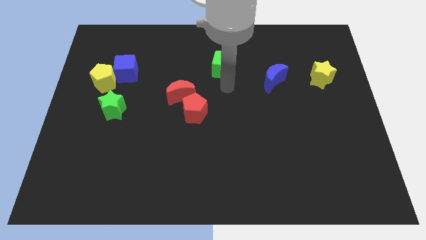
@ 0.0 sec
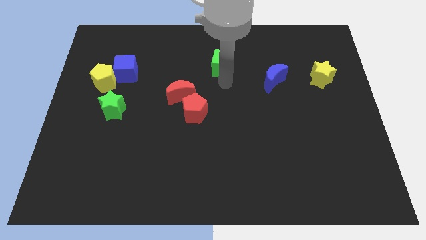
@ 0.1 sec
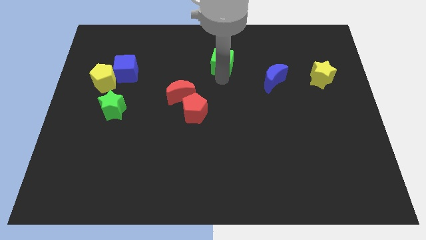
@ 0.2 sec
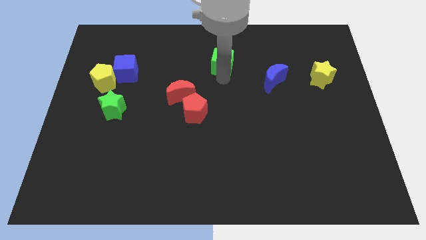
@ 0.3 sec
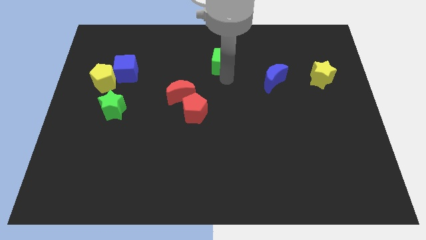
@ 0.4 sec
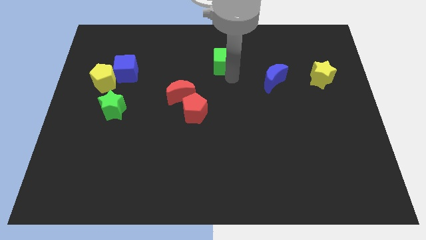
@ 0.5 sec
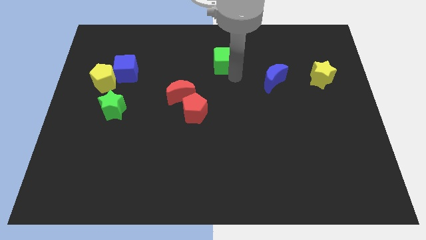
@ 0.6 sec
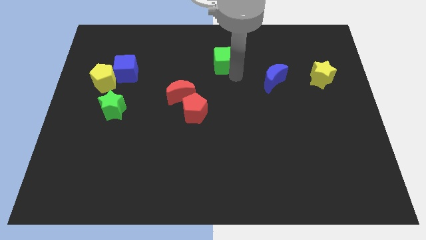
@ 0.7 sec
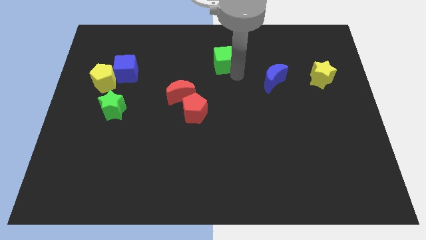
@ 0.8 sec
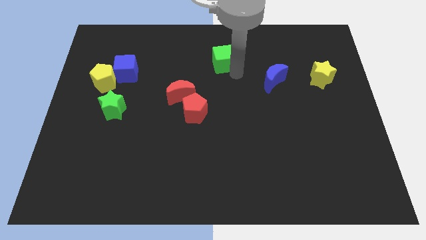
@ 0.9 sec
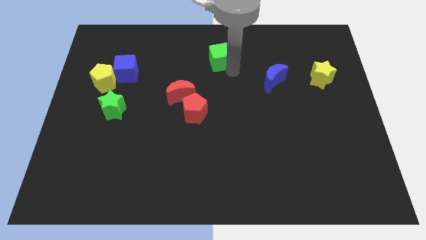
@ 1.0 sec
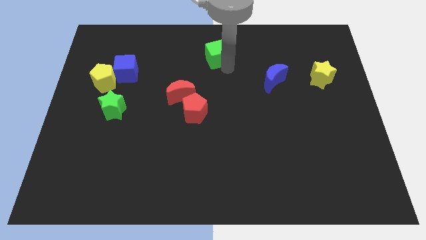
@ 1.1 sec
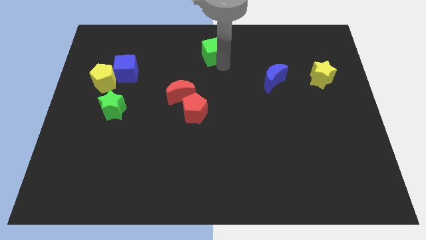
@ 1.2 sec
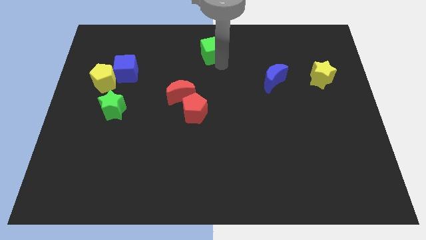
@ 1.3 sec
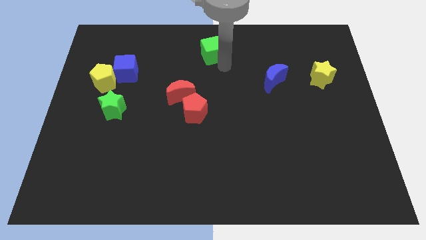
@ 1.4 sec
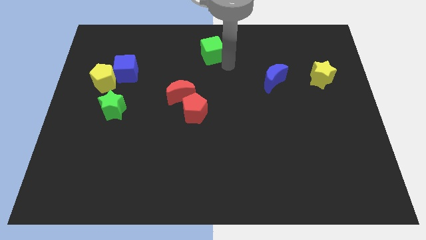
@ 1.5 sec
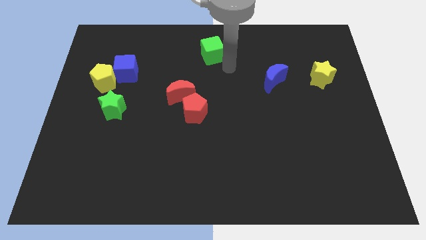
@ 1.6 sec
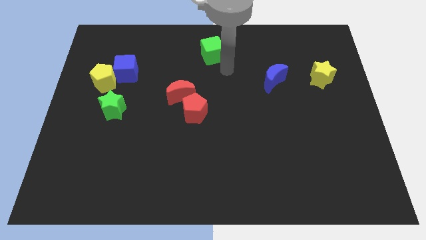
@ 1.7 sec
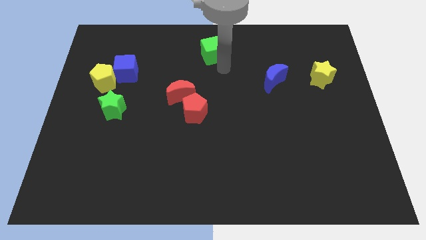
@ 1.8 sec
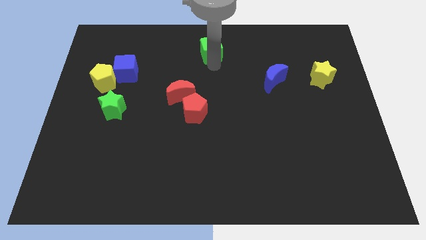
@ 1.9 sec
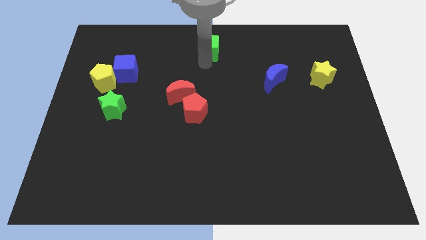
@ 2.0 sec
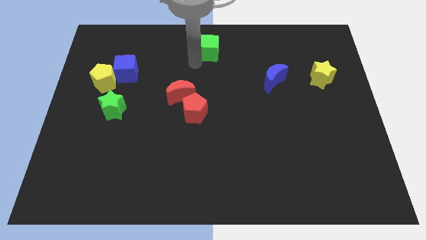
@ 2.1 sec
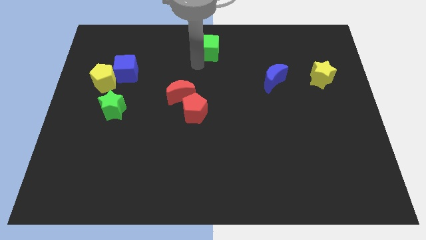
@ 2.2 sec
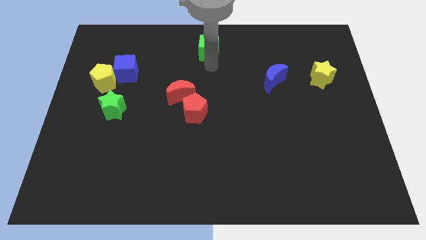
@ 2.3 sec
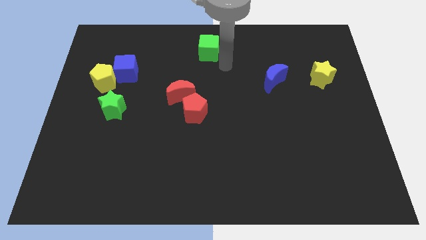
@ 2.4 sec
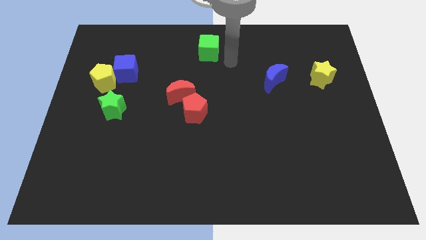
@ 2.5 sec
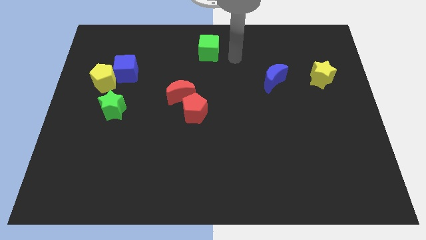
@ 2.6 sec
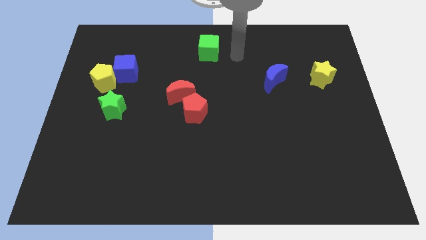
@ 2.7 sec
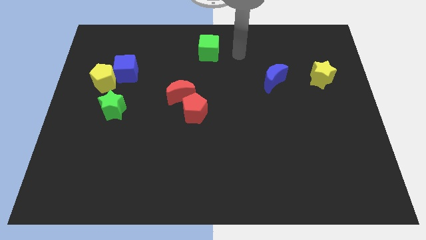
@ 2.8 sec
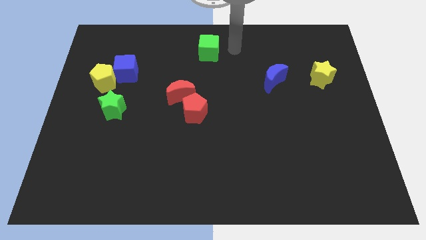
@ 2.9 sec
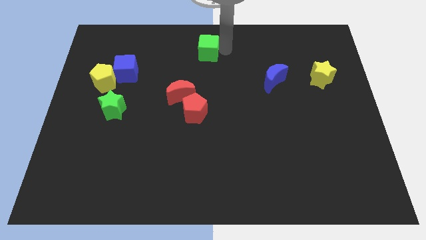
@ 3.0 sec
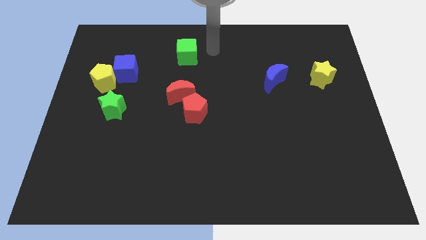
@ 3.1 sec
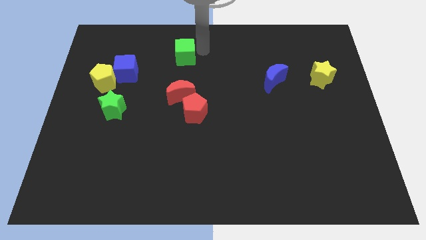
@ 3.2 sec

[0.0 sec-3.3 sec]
move the green cube above the red crescent

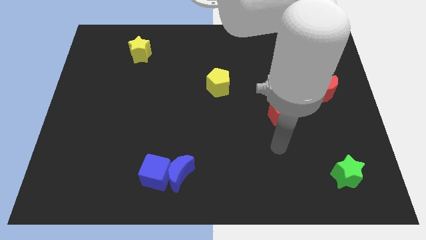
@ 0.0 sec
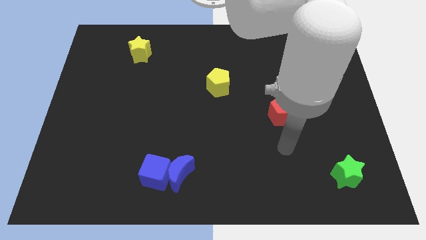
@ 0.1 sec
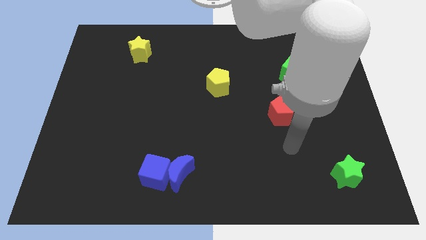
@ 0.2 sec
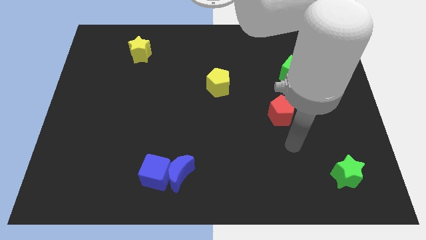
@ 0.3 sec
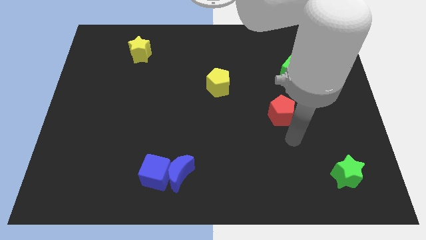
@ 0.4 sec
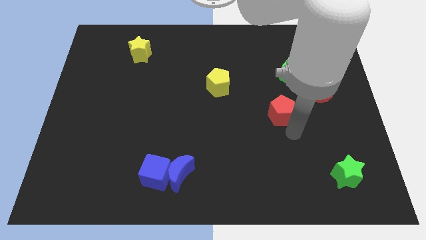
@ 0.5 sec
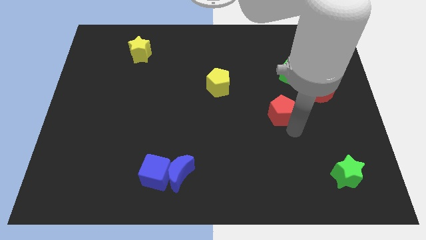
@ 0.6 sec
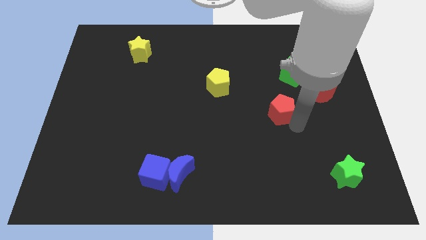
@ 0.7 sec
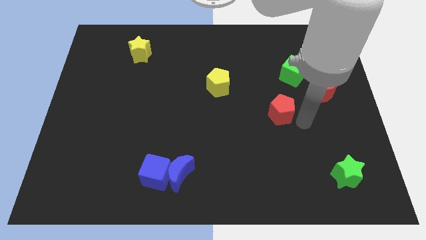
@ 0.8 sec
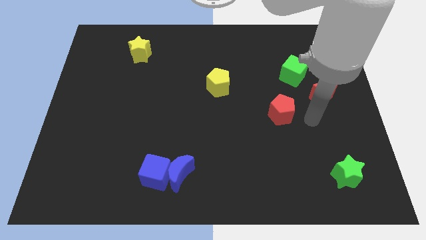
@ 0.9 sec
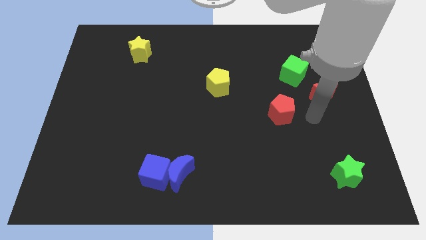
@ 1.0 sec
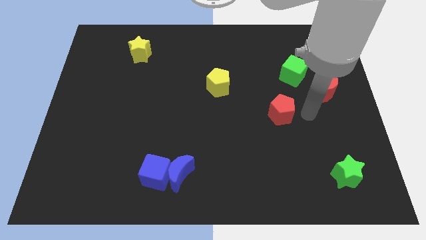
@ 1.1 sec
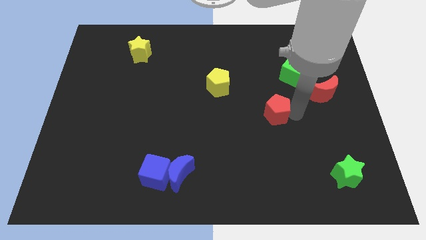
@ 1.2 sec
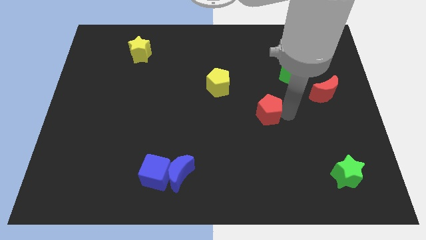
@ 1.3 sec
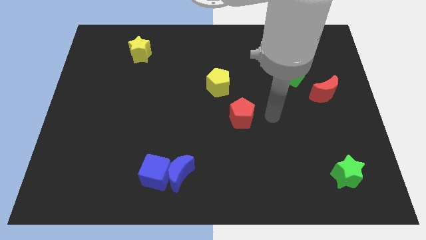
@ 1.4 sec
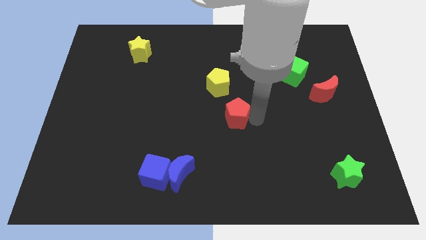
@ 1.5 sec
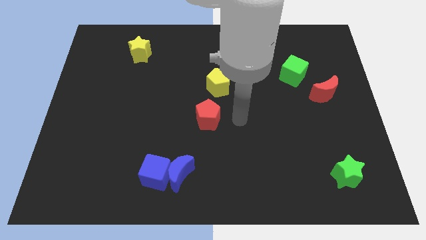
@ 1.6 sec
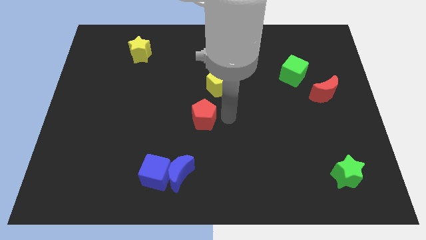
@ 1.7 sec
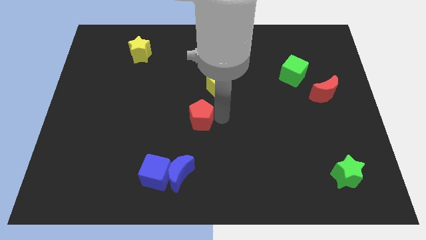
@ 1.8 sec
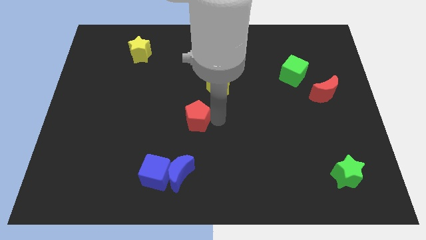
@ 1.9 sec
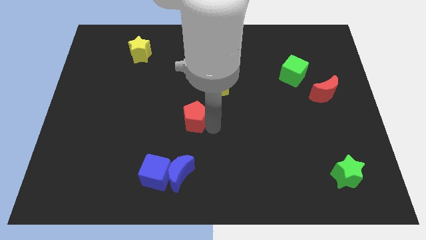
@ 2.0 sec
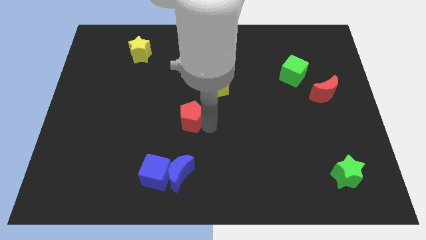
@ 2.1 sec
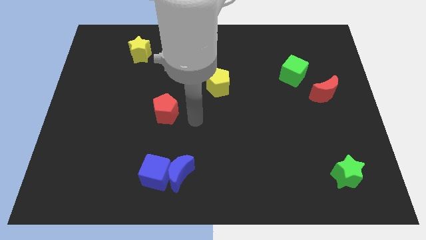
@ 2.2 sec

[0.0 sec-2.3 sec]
move the red pentagon above the blue moon

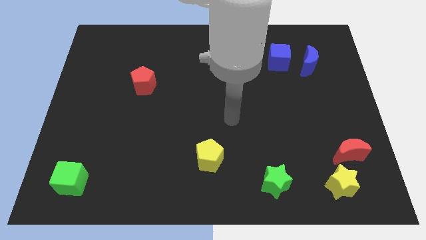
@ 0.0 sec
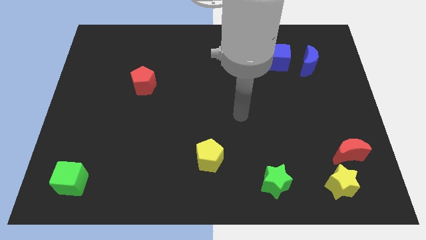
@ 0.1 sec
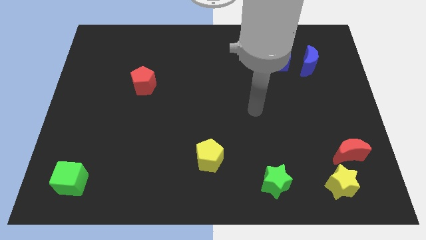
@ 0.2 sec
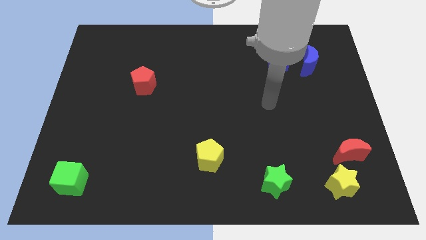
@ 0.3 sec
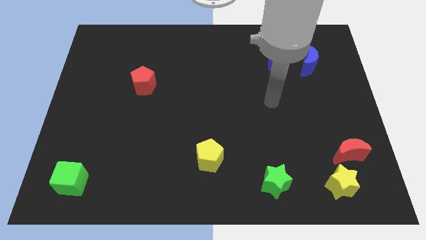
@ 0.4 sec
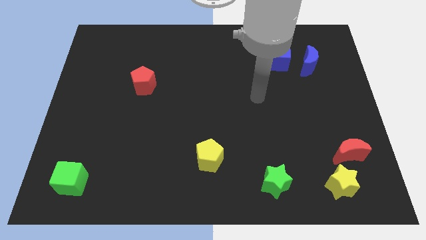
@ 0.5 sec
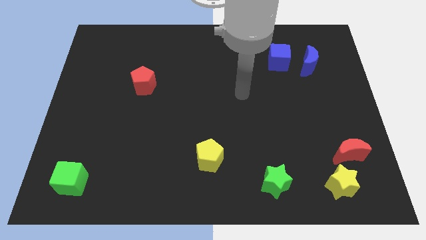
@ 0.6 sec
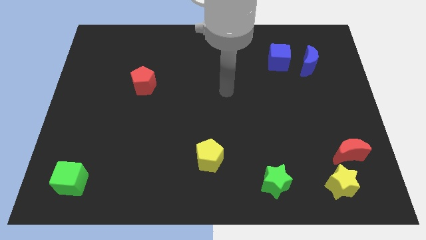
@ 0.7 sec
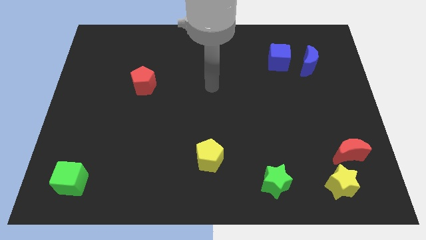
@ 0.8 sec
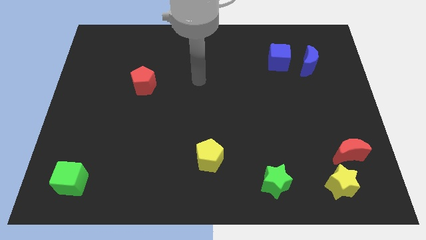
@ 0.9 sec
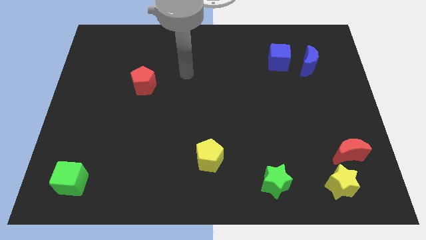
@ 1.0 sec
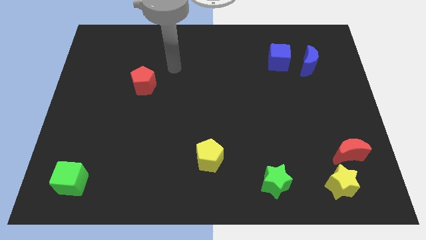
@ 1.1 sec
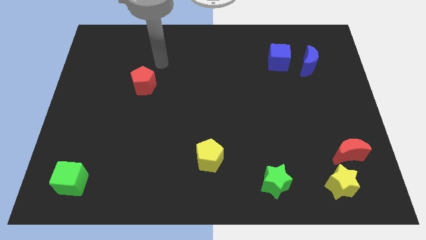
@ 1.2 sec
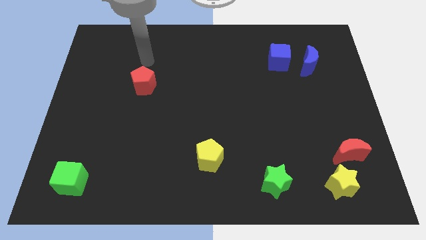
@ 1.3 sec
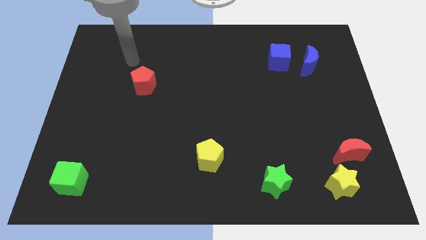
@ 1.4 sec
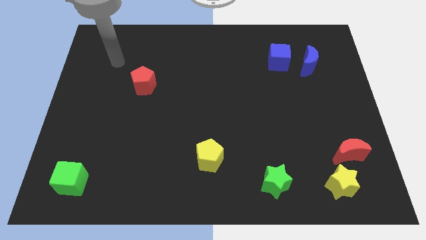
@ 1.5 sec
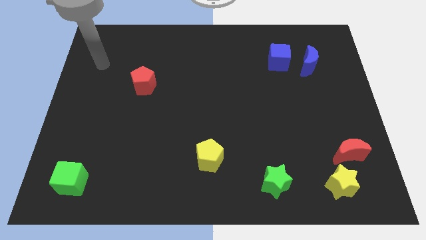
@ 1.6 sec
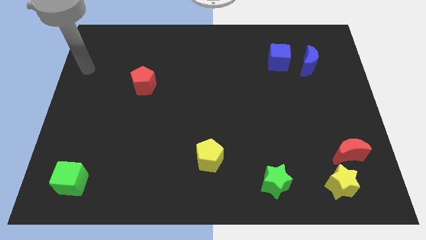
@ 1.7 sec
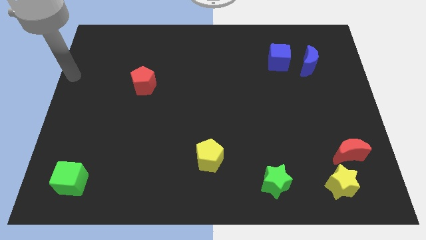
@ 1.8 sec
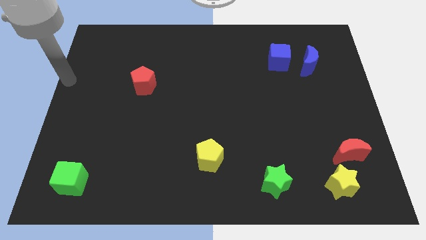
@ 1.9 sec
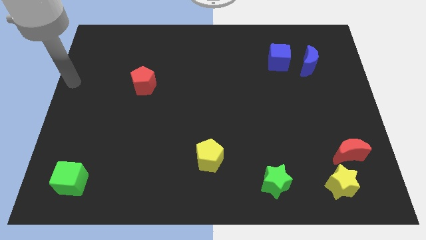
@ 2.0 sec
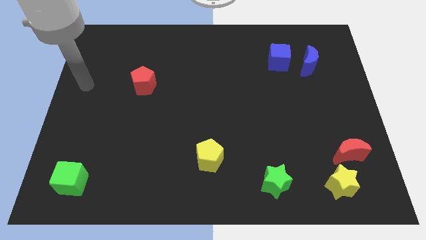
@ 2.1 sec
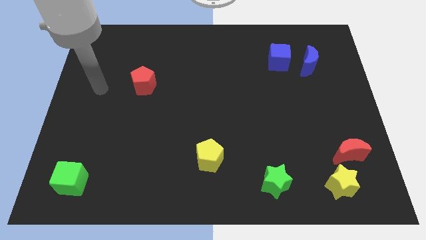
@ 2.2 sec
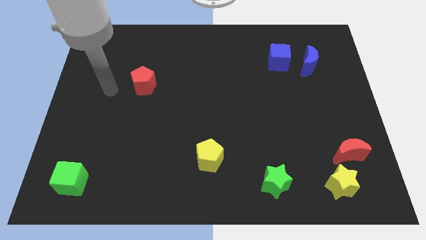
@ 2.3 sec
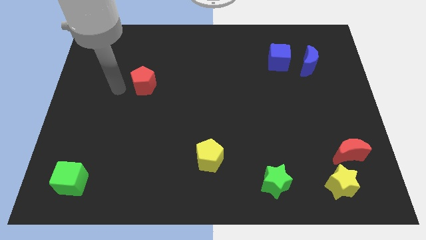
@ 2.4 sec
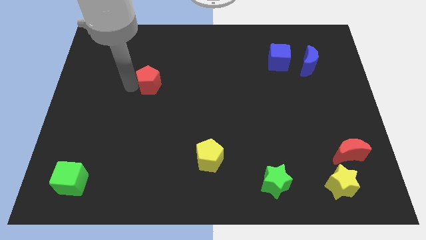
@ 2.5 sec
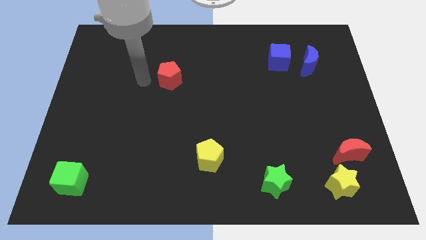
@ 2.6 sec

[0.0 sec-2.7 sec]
move your arm towards the red pentagon

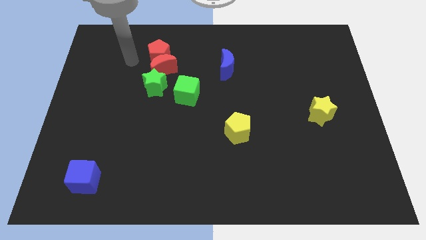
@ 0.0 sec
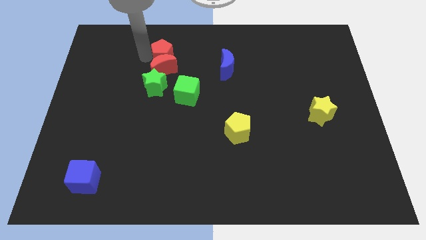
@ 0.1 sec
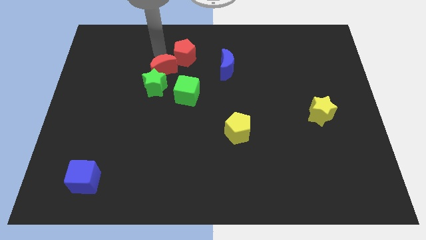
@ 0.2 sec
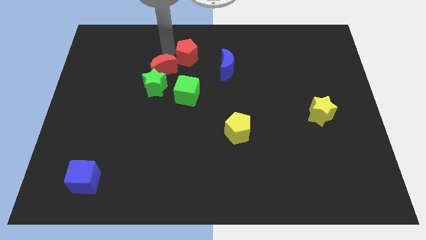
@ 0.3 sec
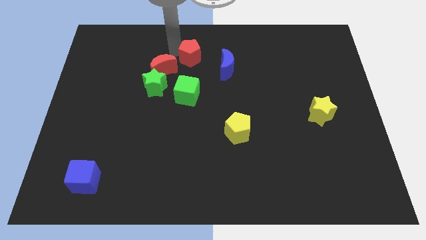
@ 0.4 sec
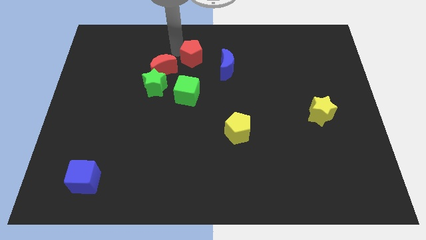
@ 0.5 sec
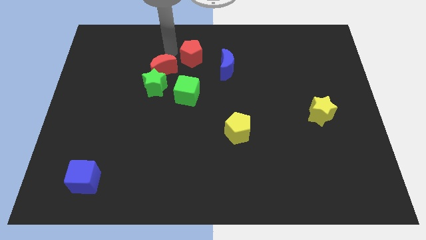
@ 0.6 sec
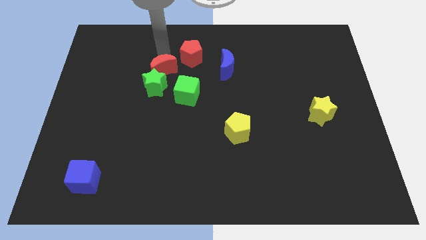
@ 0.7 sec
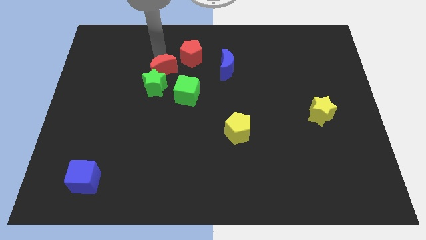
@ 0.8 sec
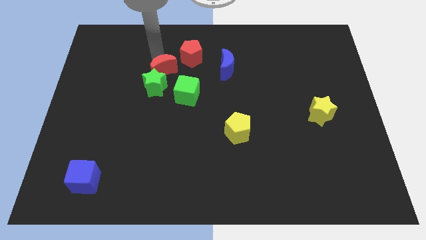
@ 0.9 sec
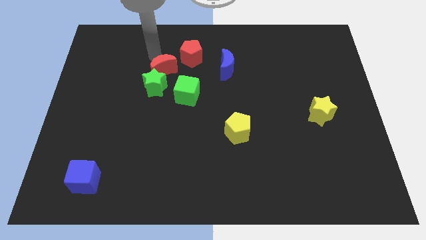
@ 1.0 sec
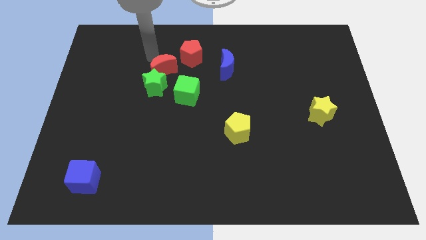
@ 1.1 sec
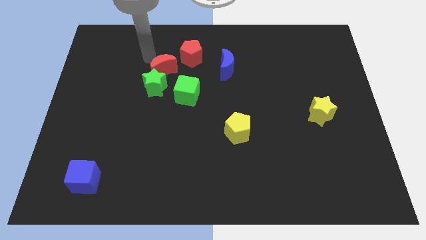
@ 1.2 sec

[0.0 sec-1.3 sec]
push the red pentagon above to the green cube
